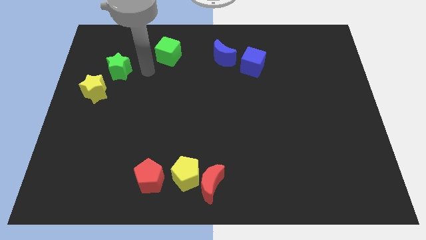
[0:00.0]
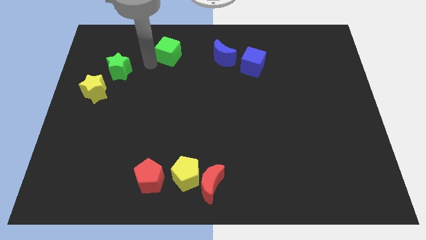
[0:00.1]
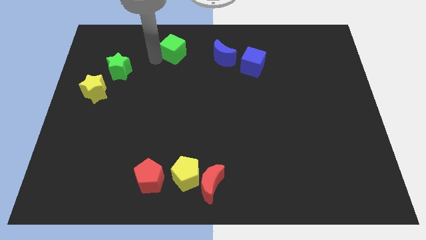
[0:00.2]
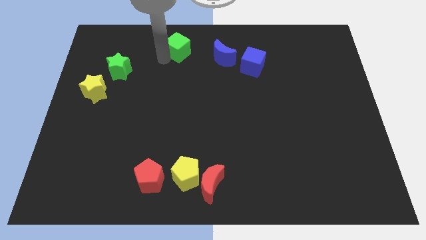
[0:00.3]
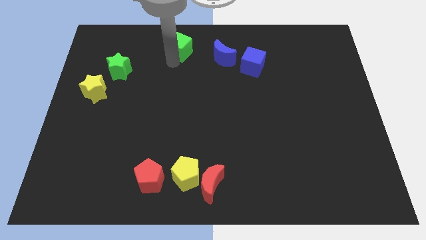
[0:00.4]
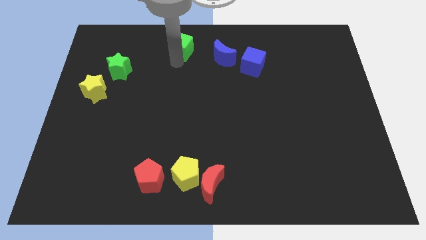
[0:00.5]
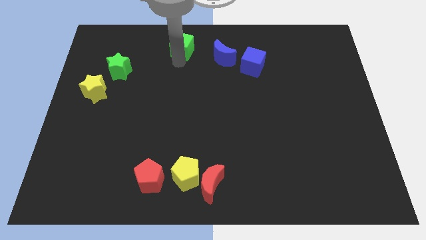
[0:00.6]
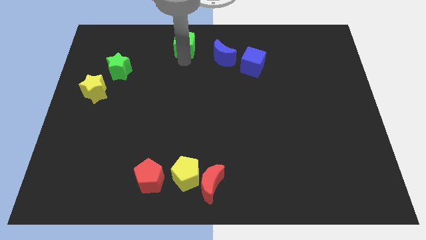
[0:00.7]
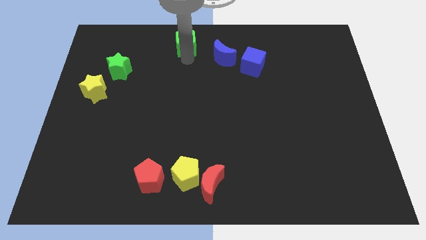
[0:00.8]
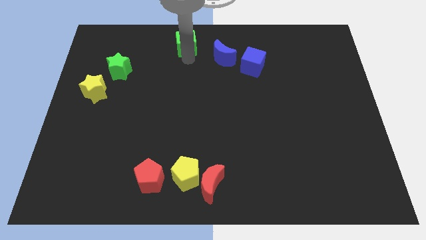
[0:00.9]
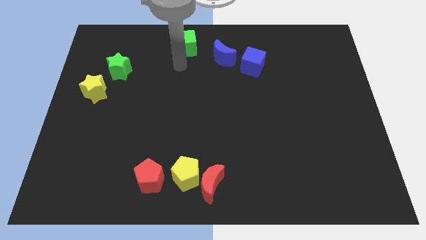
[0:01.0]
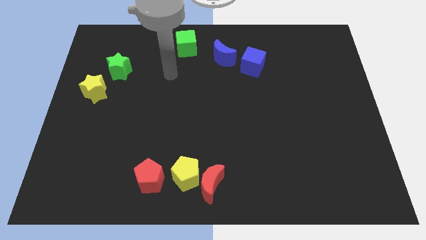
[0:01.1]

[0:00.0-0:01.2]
move the green cube towards the top center of the board

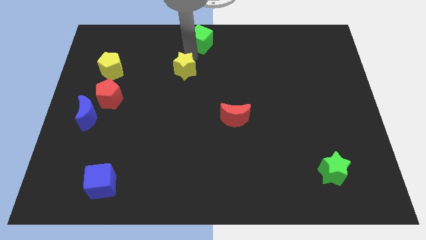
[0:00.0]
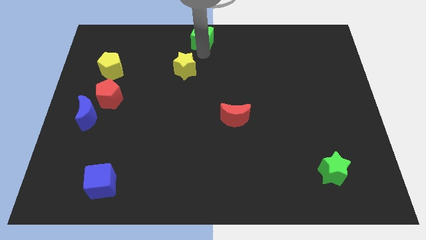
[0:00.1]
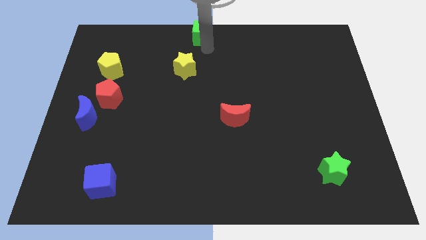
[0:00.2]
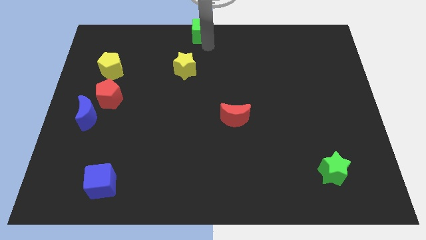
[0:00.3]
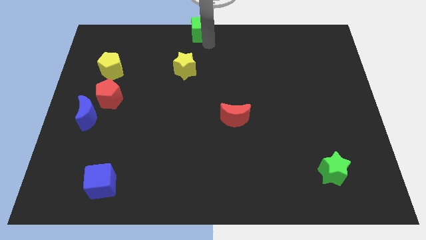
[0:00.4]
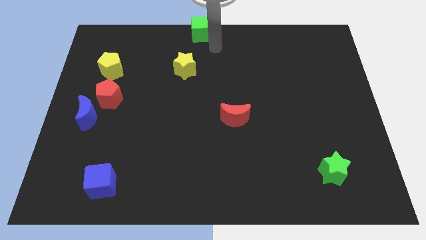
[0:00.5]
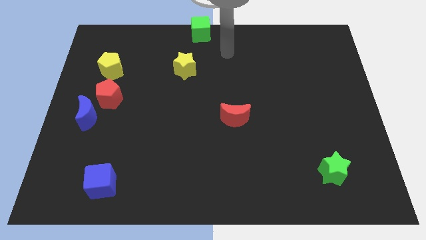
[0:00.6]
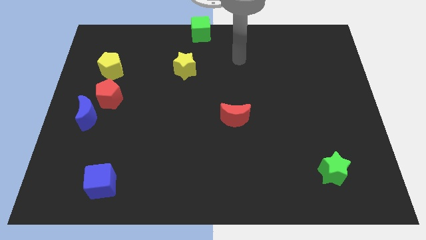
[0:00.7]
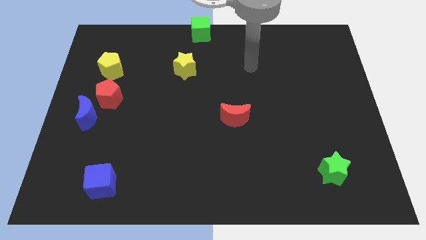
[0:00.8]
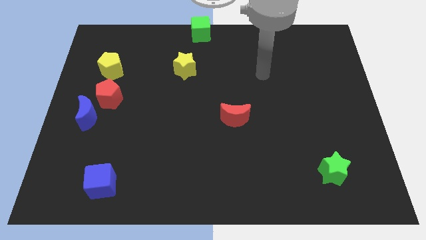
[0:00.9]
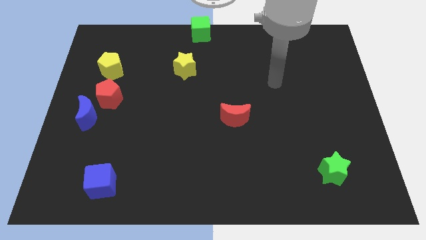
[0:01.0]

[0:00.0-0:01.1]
move the arm away from the green cube

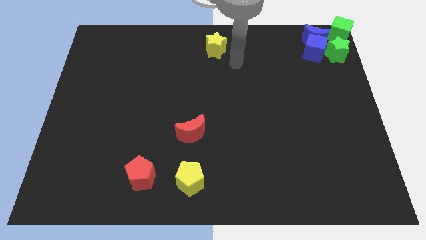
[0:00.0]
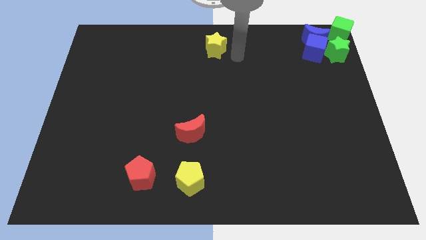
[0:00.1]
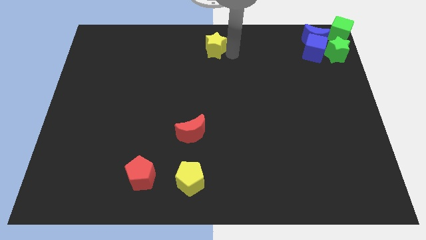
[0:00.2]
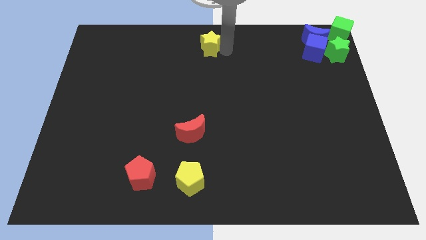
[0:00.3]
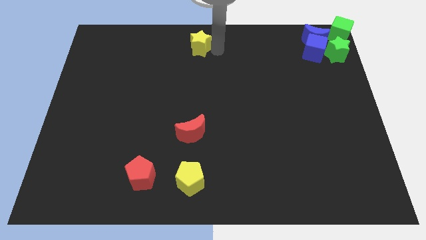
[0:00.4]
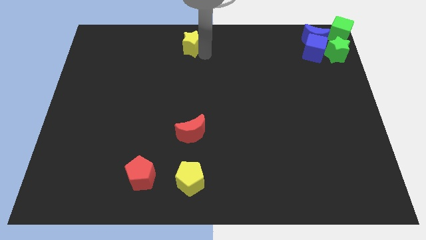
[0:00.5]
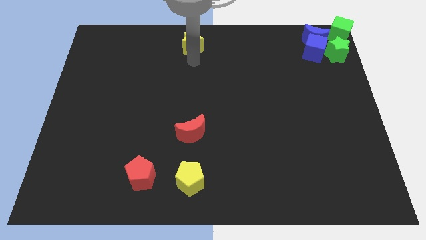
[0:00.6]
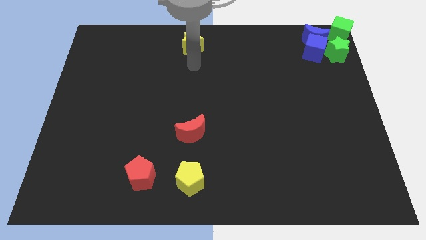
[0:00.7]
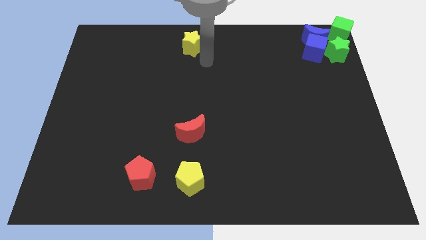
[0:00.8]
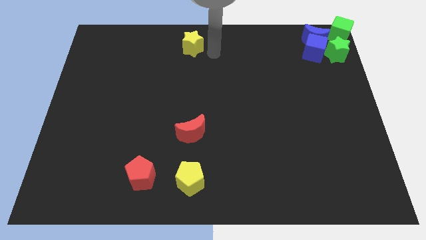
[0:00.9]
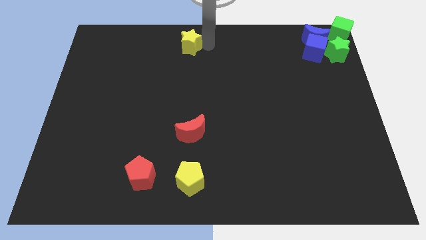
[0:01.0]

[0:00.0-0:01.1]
slide the yellow star slightly to the left

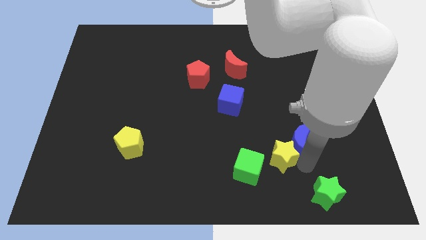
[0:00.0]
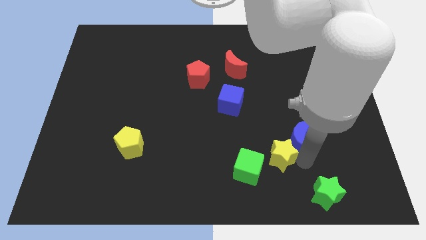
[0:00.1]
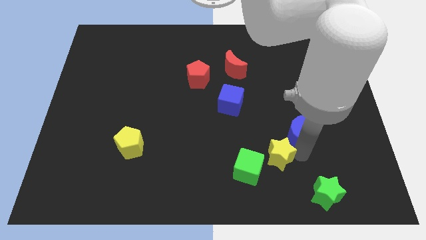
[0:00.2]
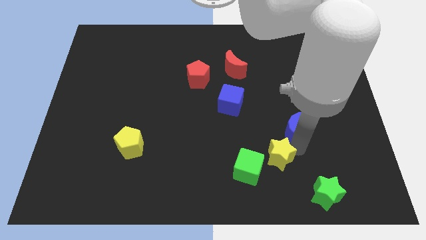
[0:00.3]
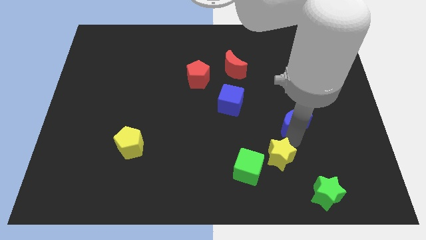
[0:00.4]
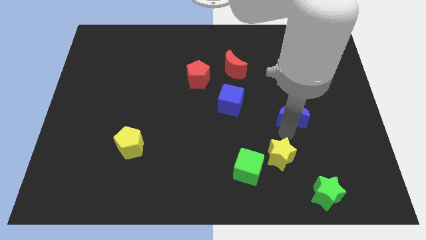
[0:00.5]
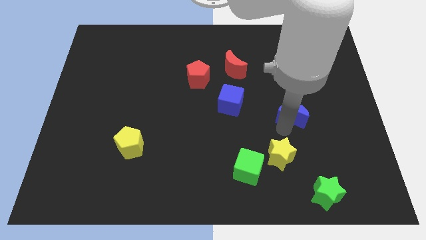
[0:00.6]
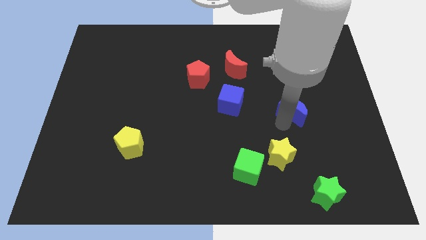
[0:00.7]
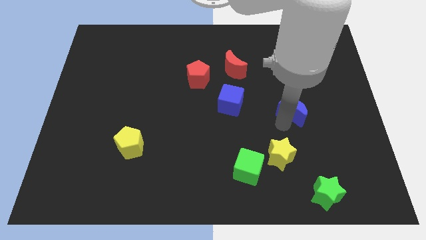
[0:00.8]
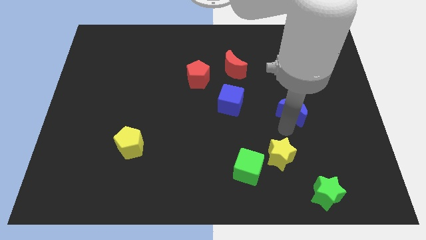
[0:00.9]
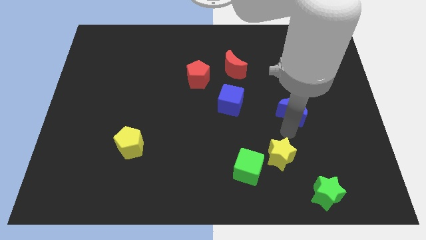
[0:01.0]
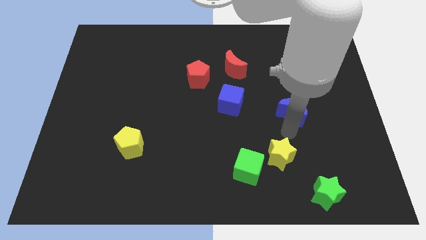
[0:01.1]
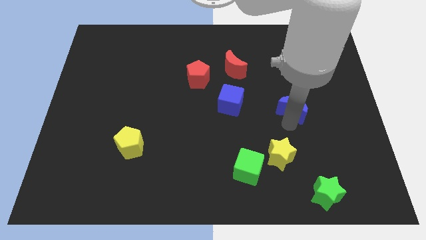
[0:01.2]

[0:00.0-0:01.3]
move the blue crescent right to the blue cube on the board

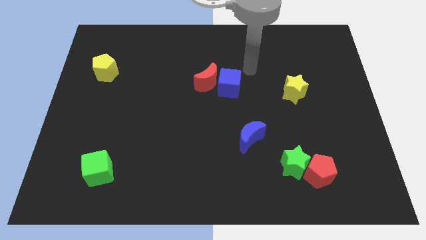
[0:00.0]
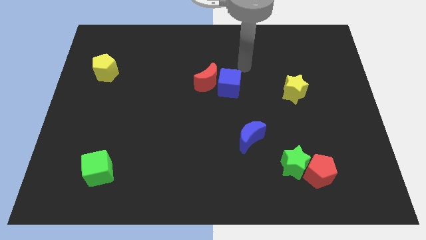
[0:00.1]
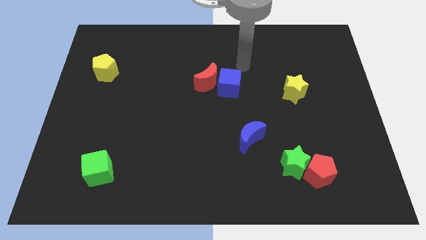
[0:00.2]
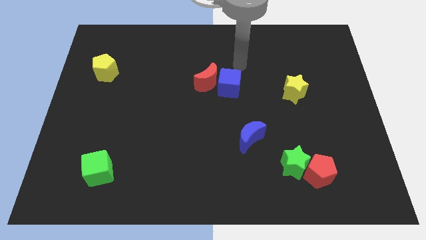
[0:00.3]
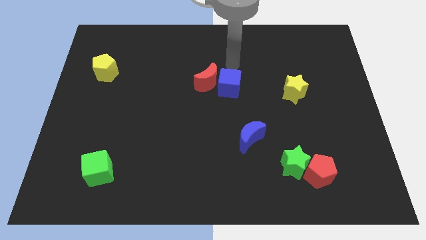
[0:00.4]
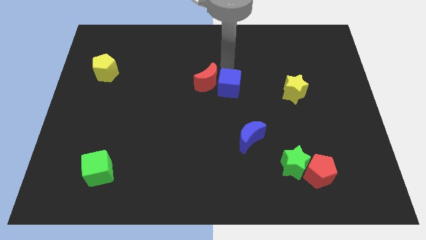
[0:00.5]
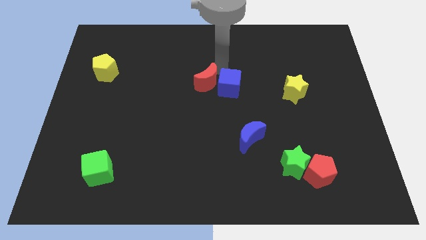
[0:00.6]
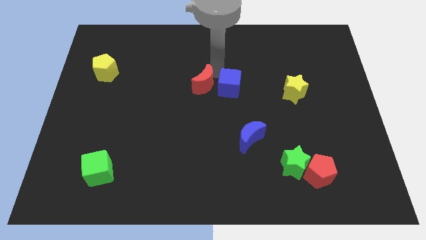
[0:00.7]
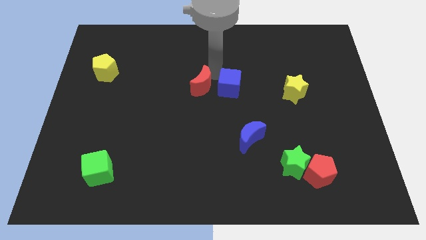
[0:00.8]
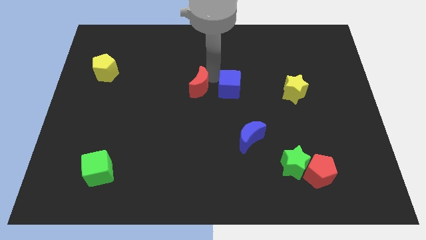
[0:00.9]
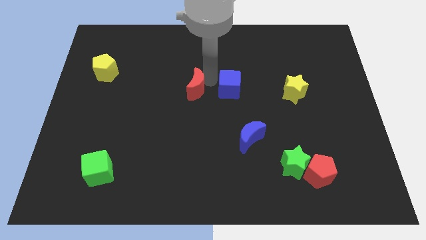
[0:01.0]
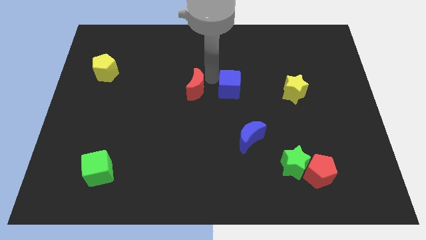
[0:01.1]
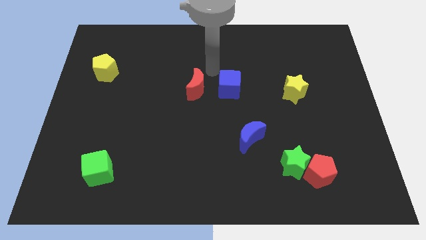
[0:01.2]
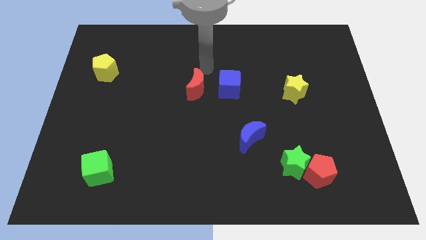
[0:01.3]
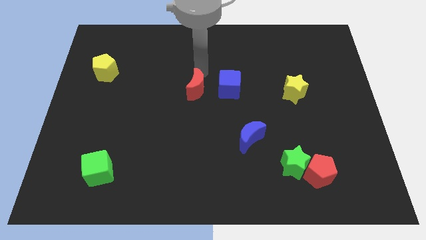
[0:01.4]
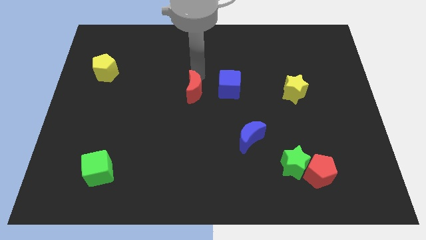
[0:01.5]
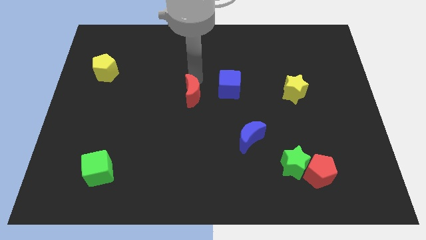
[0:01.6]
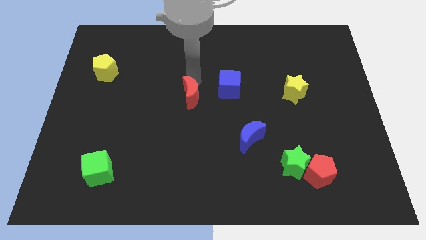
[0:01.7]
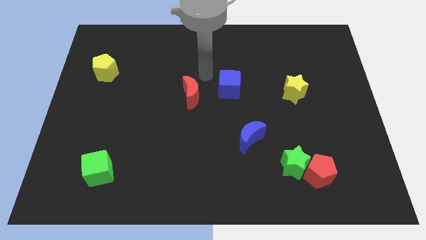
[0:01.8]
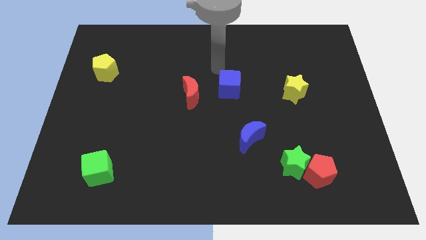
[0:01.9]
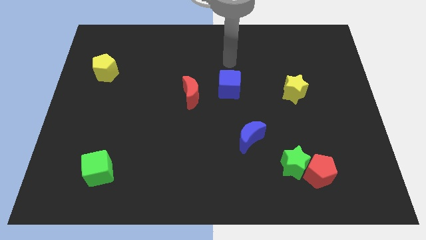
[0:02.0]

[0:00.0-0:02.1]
separate blue cube and red moon

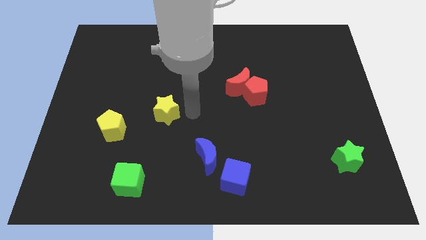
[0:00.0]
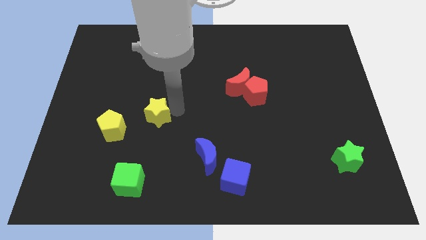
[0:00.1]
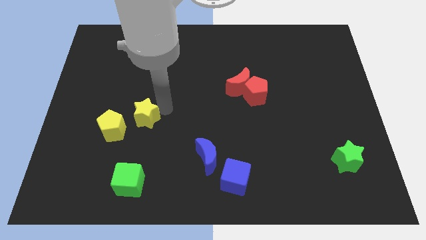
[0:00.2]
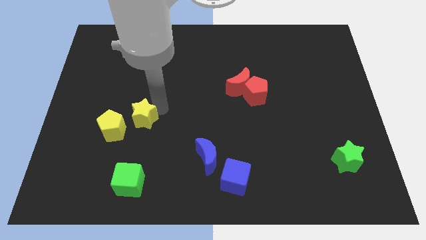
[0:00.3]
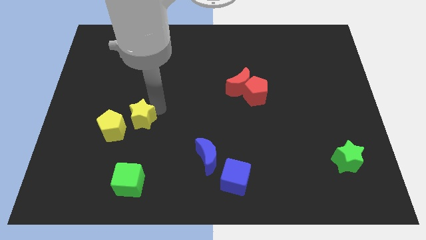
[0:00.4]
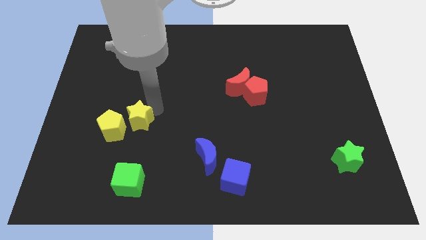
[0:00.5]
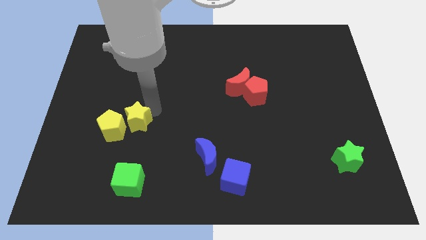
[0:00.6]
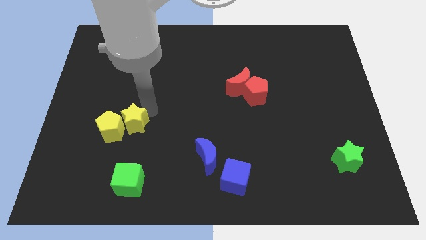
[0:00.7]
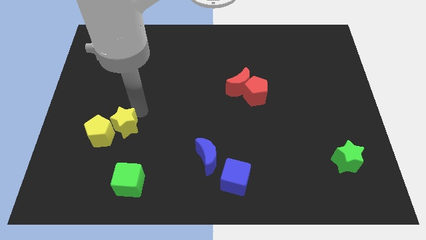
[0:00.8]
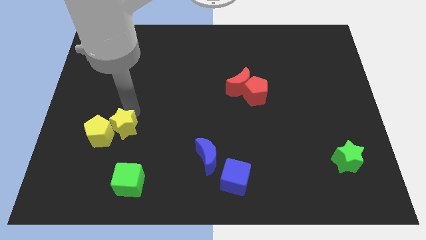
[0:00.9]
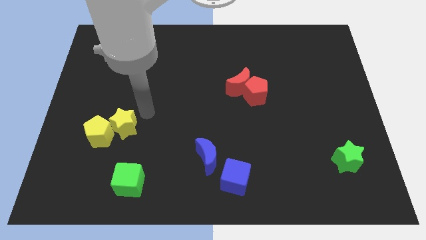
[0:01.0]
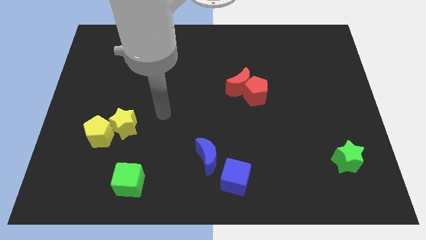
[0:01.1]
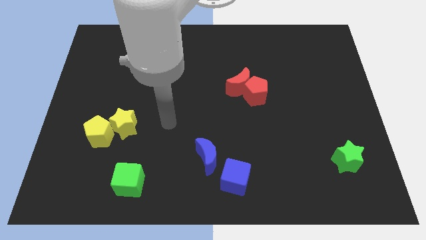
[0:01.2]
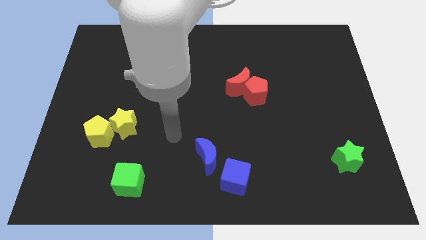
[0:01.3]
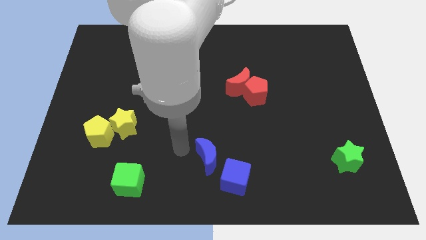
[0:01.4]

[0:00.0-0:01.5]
push the yellow star into the yellow pentagon diagonally

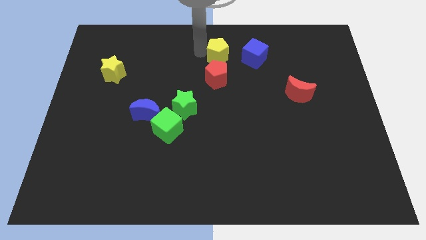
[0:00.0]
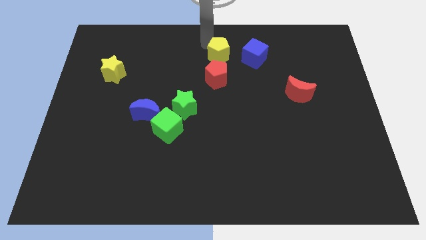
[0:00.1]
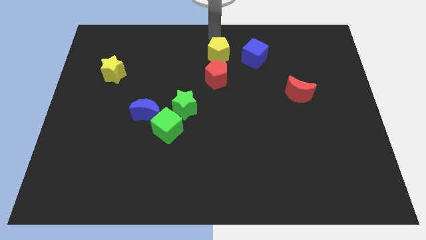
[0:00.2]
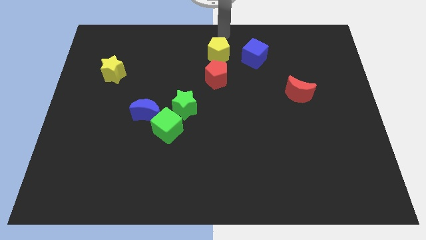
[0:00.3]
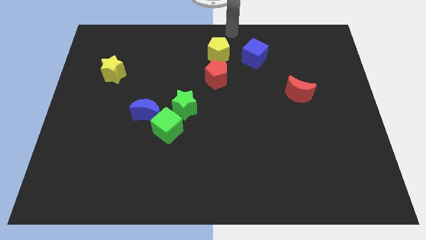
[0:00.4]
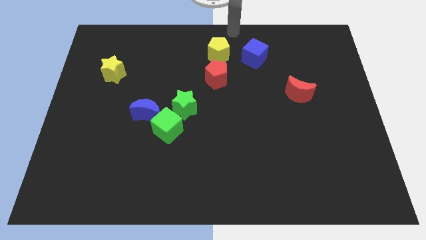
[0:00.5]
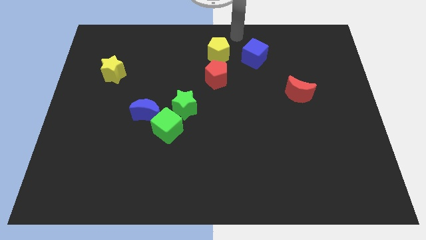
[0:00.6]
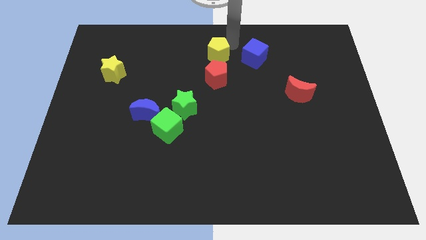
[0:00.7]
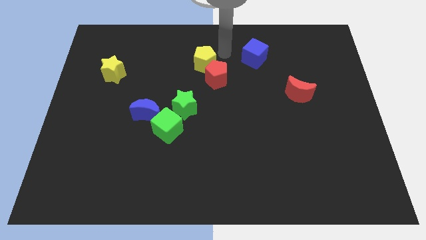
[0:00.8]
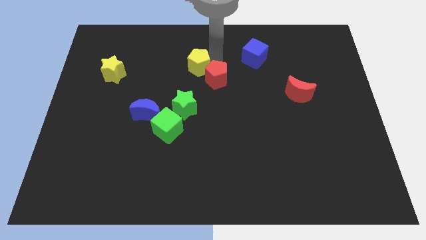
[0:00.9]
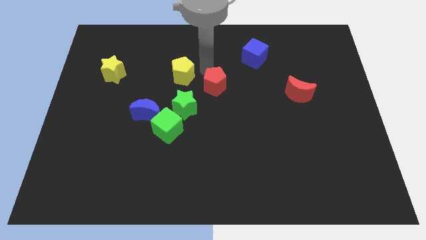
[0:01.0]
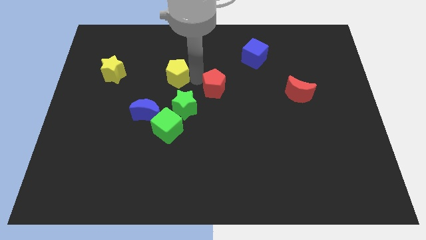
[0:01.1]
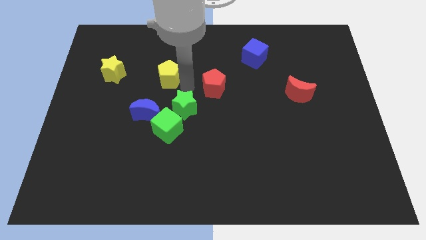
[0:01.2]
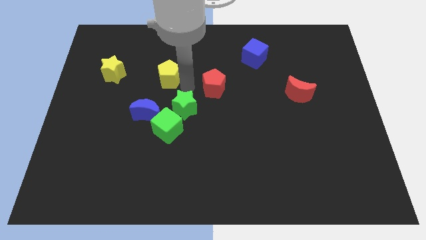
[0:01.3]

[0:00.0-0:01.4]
move the yellow pentagon and the red pentagon towards the center
